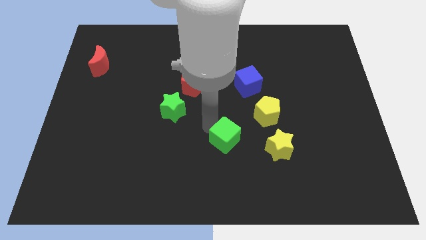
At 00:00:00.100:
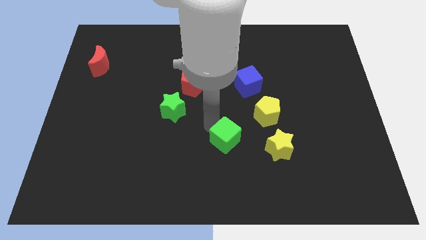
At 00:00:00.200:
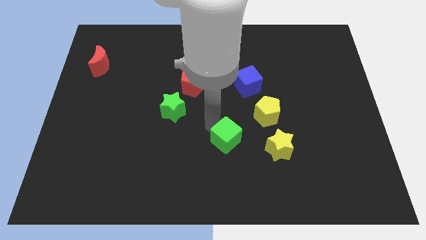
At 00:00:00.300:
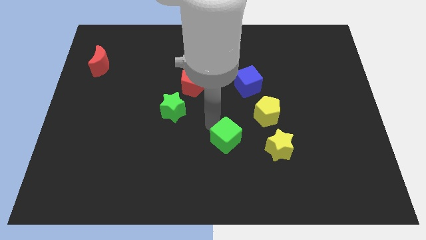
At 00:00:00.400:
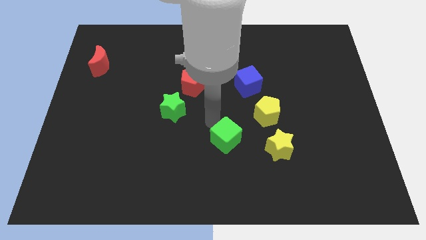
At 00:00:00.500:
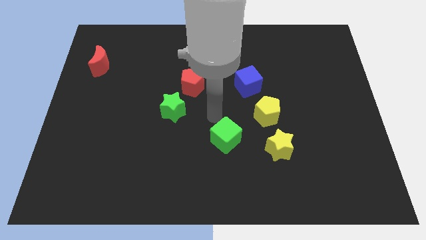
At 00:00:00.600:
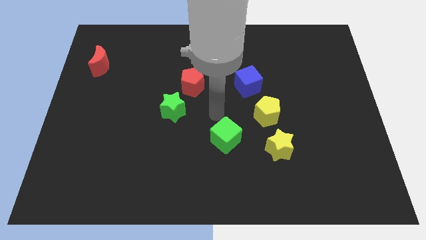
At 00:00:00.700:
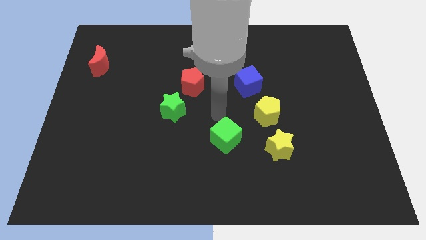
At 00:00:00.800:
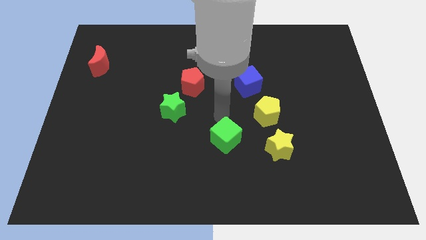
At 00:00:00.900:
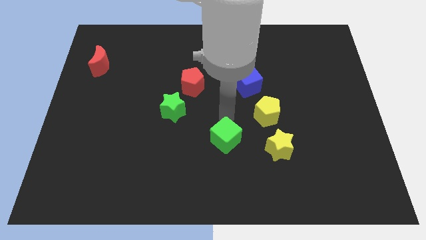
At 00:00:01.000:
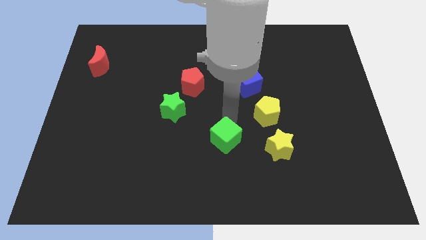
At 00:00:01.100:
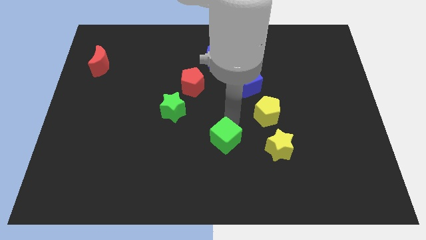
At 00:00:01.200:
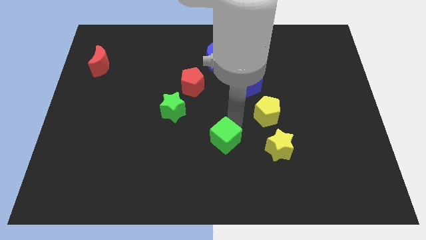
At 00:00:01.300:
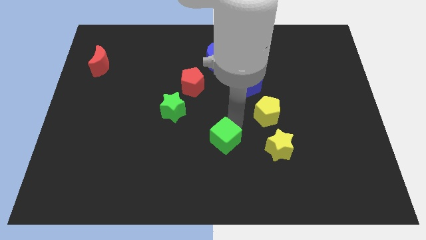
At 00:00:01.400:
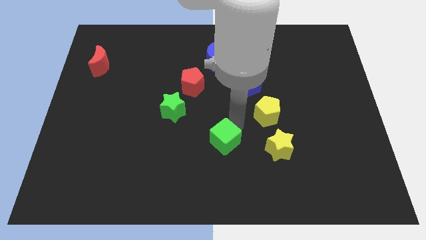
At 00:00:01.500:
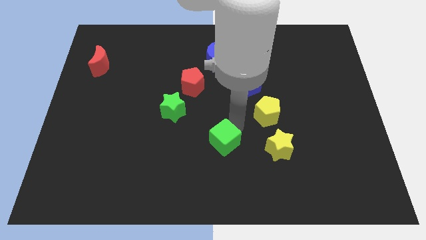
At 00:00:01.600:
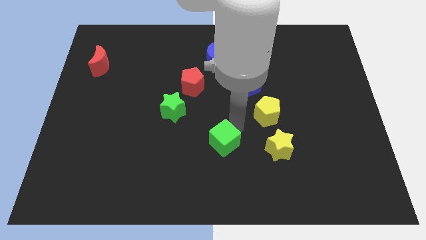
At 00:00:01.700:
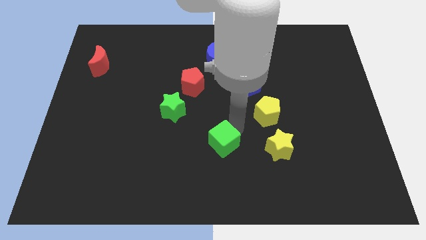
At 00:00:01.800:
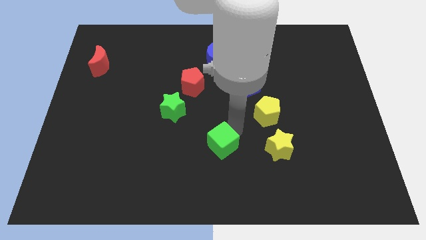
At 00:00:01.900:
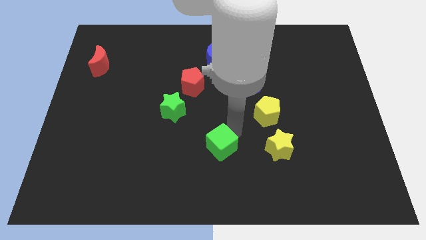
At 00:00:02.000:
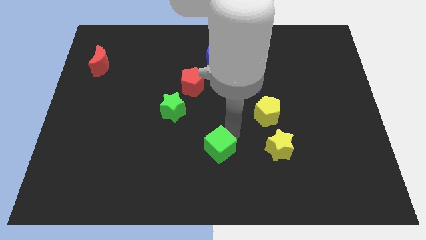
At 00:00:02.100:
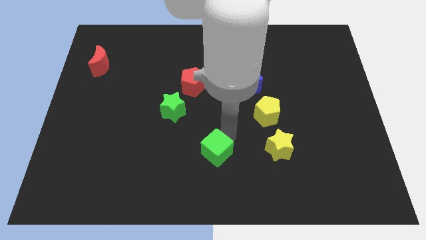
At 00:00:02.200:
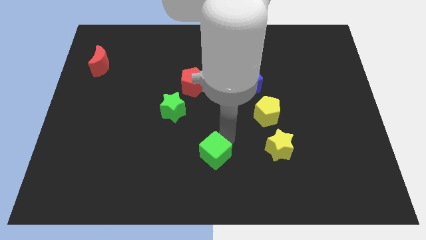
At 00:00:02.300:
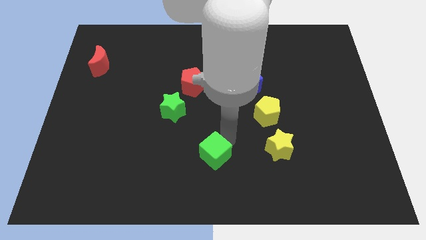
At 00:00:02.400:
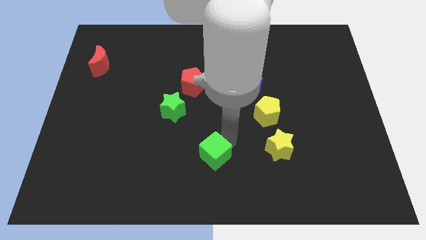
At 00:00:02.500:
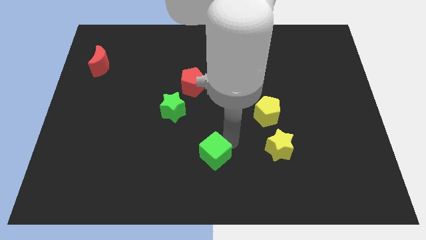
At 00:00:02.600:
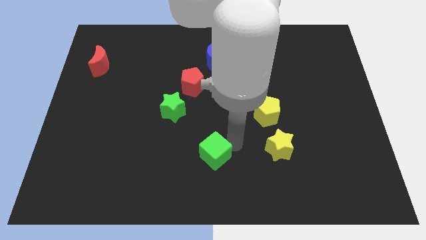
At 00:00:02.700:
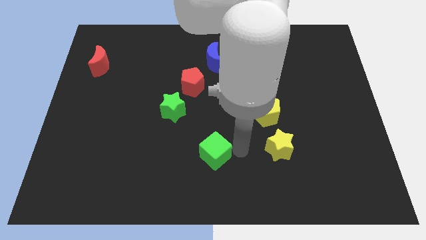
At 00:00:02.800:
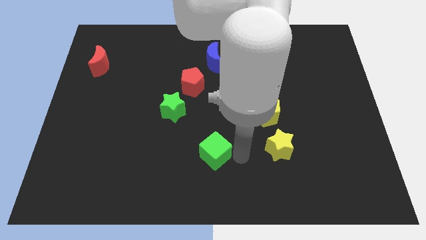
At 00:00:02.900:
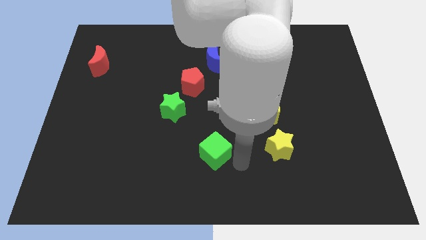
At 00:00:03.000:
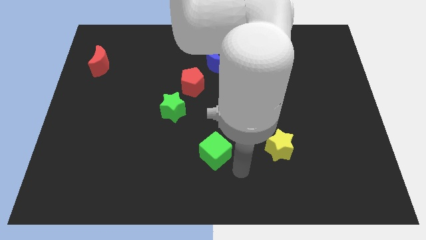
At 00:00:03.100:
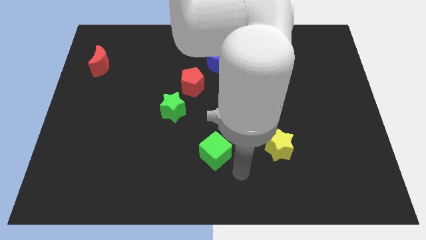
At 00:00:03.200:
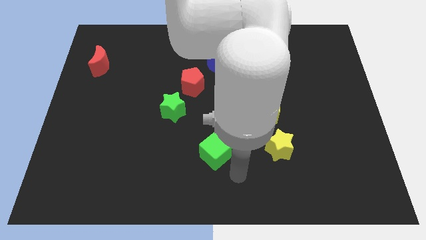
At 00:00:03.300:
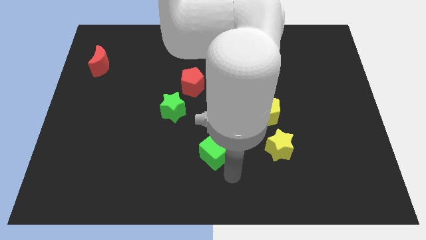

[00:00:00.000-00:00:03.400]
push the green cube slightly to the left

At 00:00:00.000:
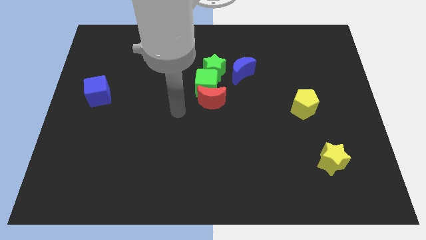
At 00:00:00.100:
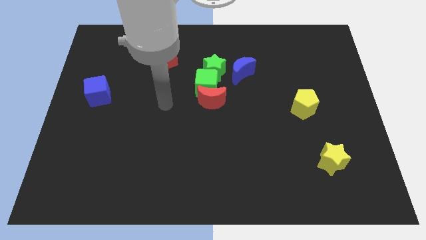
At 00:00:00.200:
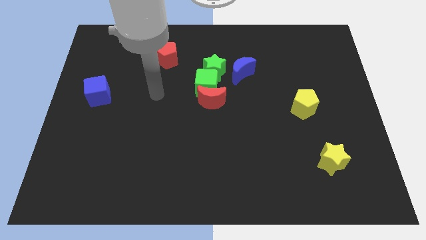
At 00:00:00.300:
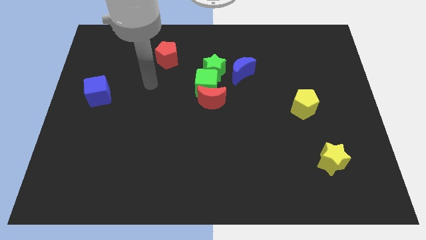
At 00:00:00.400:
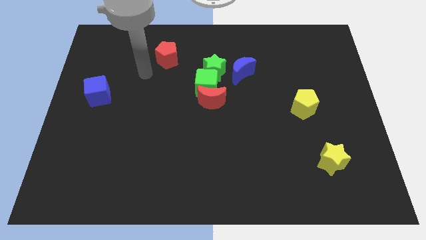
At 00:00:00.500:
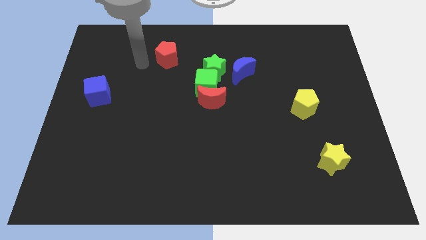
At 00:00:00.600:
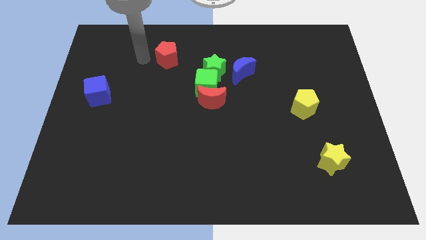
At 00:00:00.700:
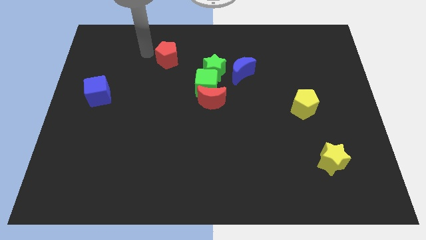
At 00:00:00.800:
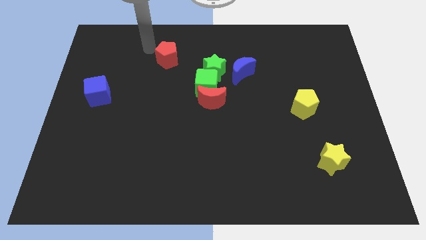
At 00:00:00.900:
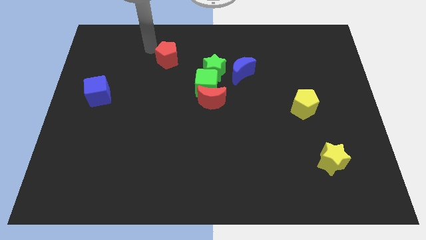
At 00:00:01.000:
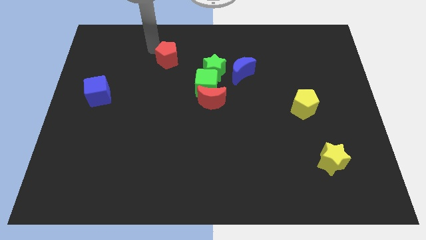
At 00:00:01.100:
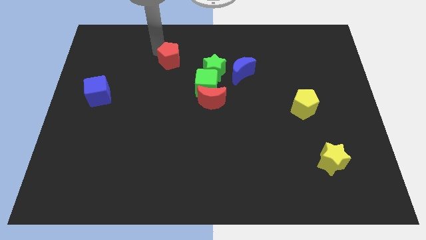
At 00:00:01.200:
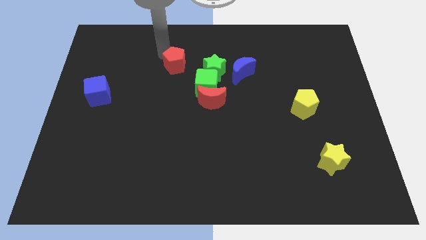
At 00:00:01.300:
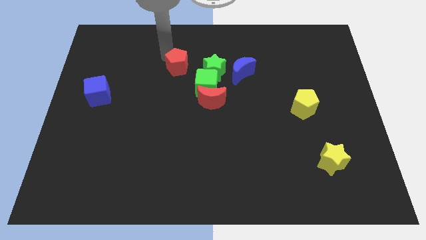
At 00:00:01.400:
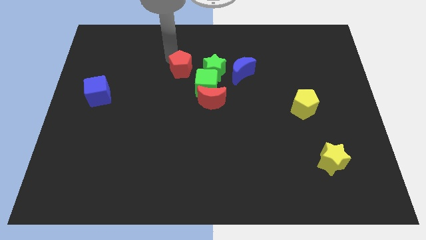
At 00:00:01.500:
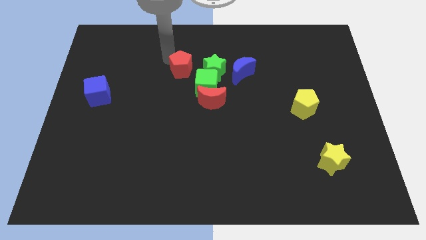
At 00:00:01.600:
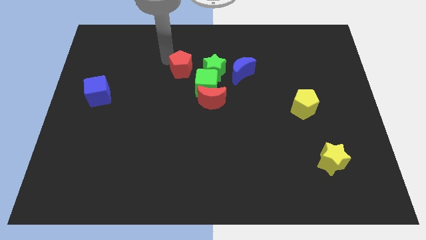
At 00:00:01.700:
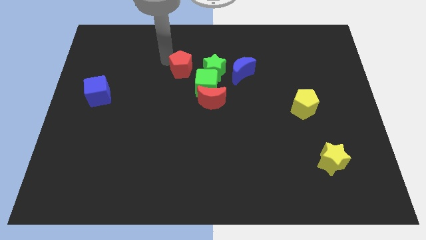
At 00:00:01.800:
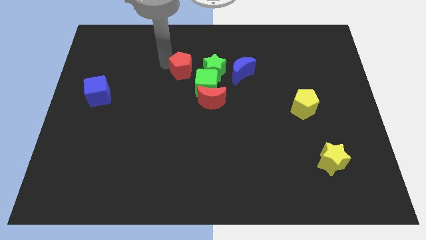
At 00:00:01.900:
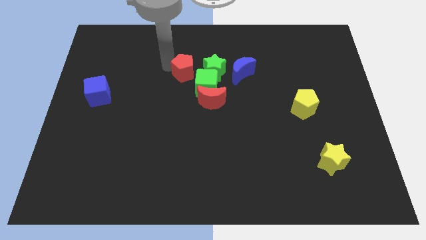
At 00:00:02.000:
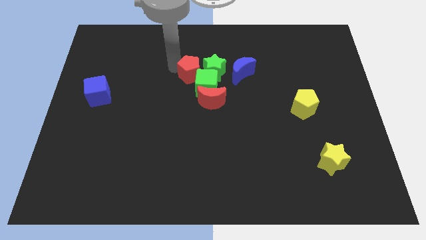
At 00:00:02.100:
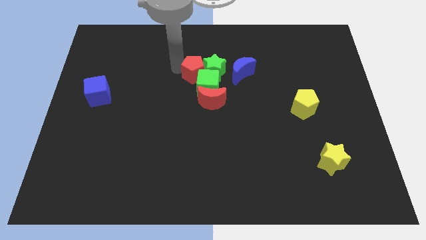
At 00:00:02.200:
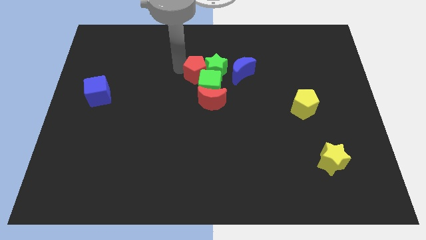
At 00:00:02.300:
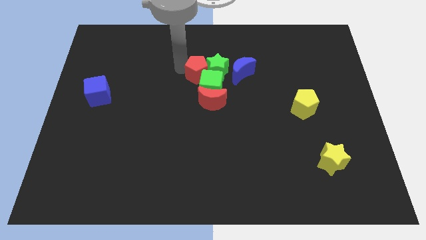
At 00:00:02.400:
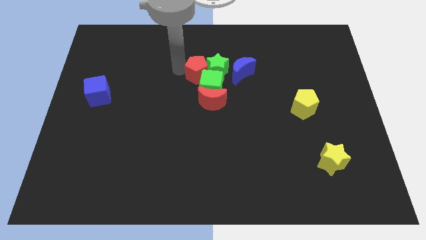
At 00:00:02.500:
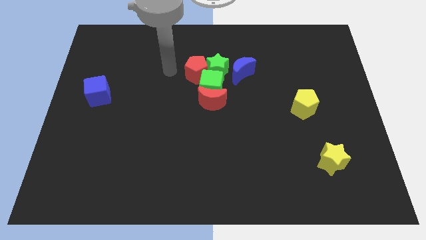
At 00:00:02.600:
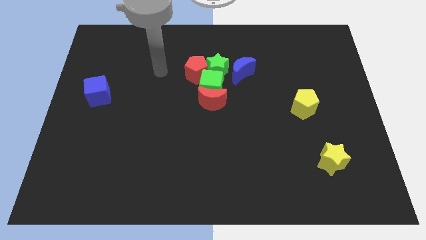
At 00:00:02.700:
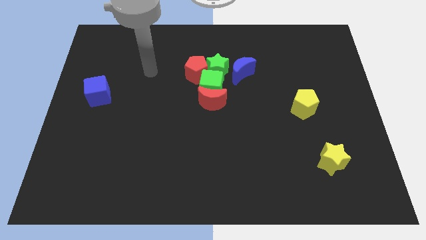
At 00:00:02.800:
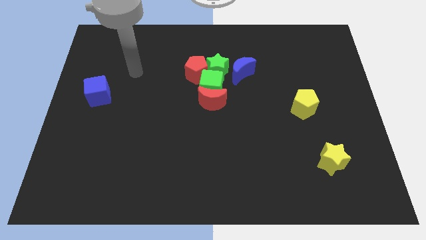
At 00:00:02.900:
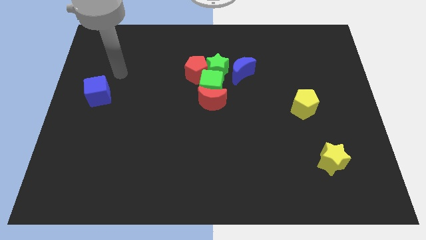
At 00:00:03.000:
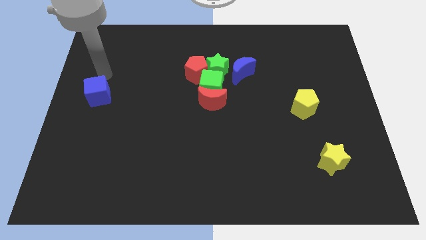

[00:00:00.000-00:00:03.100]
push the green star and green cube with the red pentagon

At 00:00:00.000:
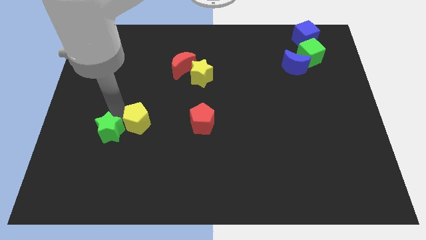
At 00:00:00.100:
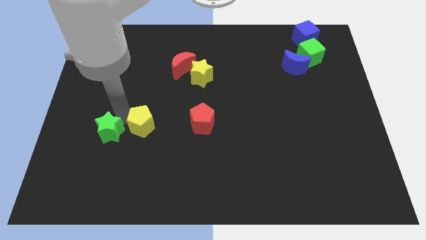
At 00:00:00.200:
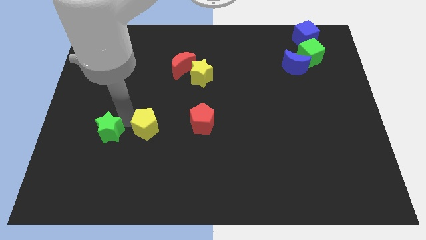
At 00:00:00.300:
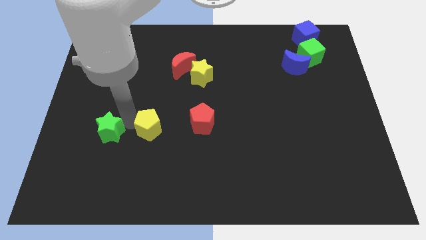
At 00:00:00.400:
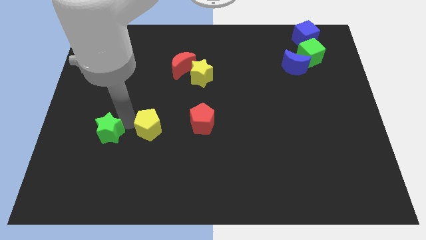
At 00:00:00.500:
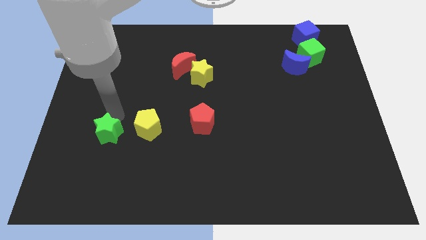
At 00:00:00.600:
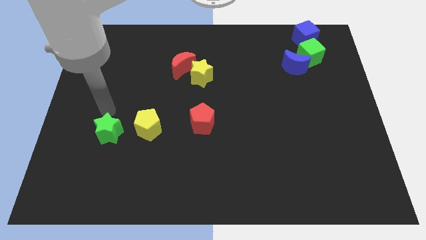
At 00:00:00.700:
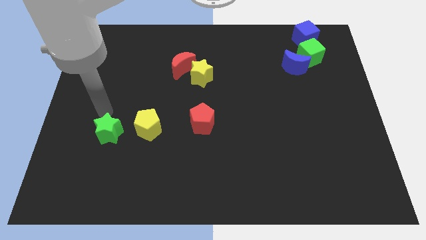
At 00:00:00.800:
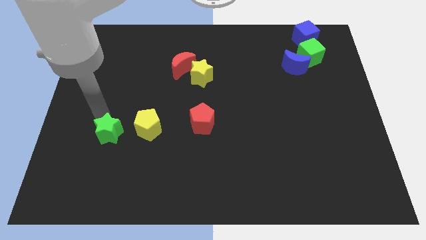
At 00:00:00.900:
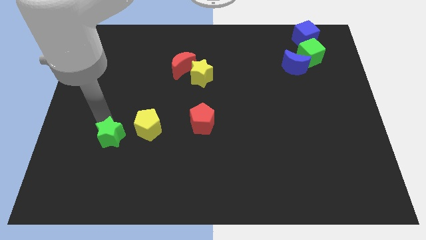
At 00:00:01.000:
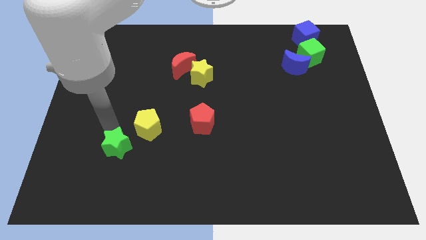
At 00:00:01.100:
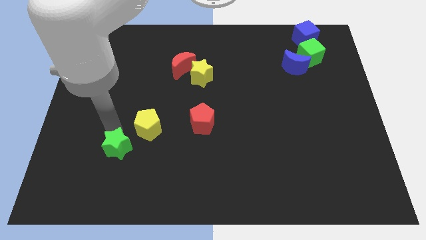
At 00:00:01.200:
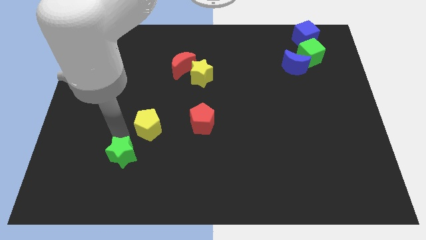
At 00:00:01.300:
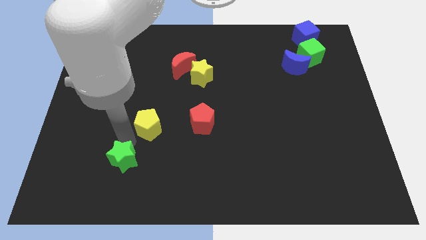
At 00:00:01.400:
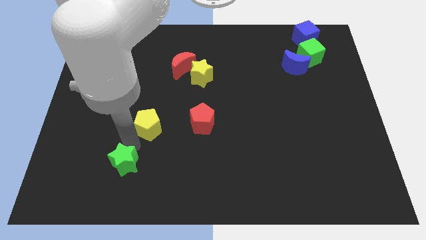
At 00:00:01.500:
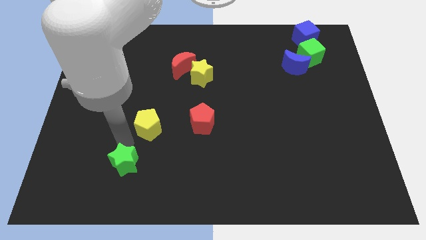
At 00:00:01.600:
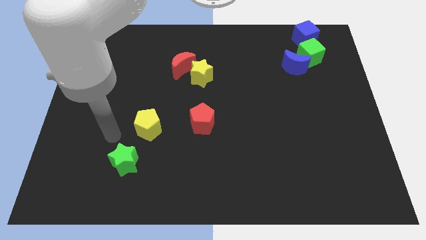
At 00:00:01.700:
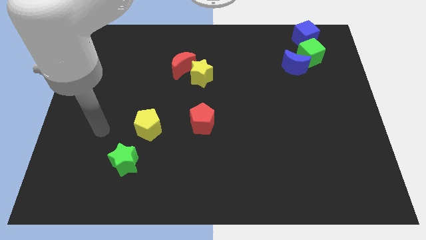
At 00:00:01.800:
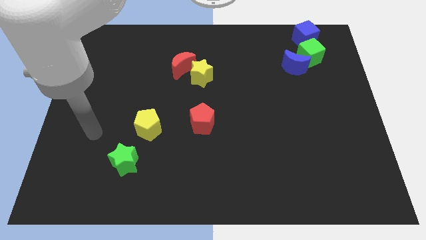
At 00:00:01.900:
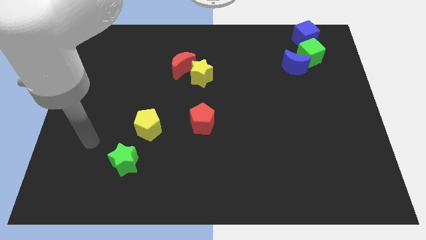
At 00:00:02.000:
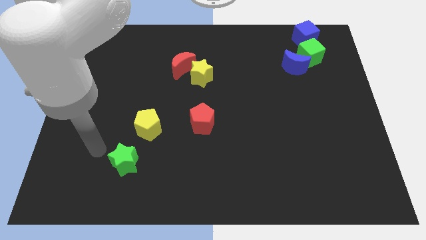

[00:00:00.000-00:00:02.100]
separate the green star from the yellow pentagon

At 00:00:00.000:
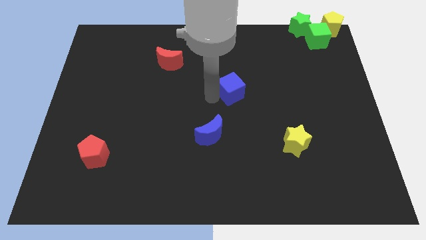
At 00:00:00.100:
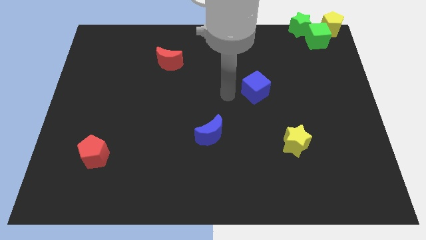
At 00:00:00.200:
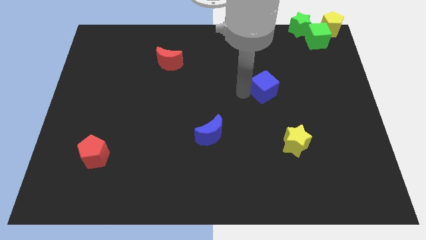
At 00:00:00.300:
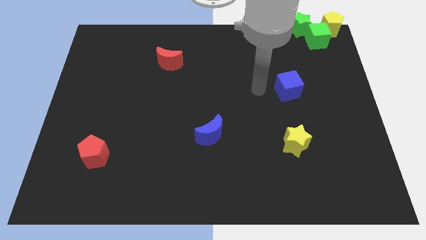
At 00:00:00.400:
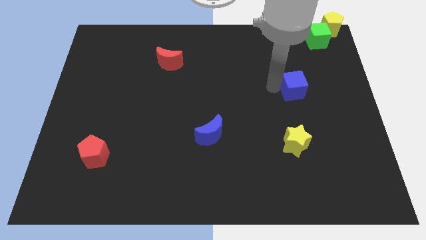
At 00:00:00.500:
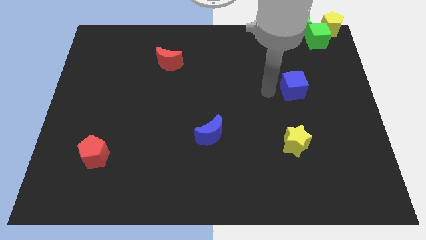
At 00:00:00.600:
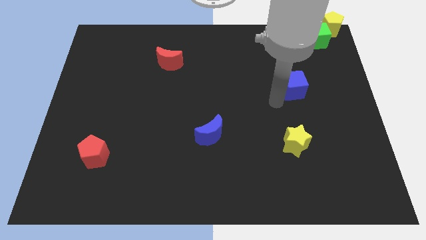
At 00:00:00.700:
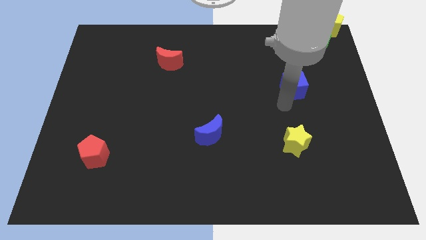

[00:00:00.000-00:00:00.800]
push the blue cube vertically above the yellow star
